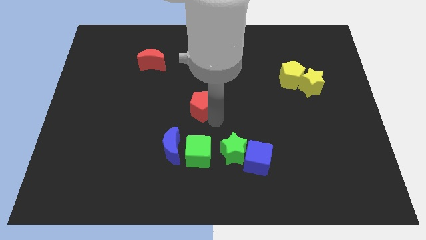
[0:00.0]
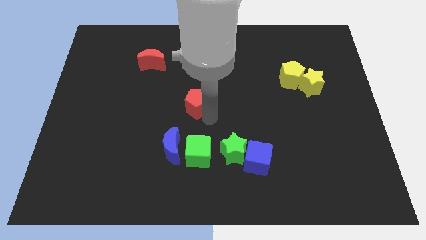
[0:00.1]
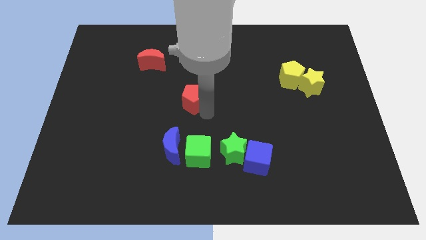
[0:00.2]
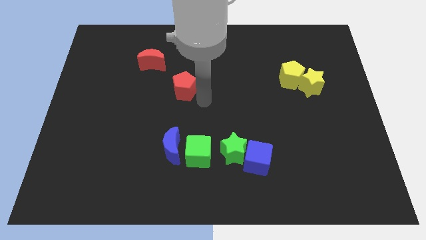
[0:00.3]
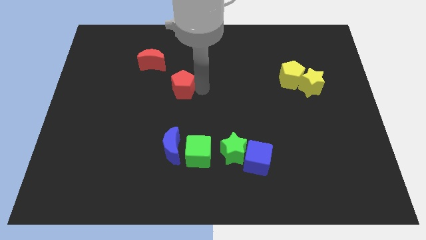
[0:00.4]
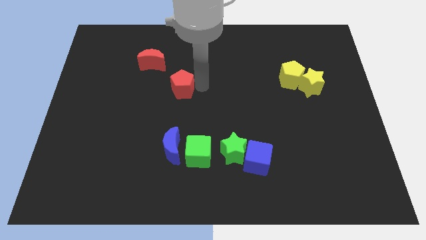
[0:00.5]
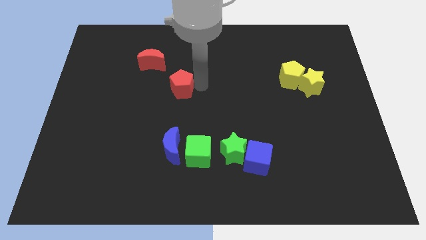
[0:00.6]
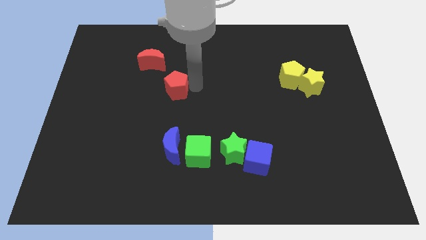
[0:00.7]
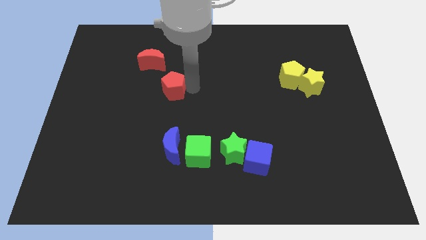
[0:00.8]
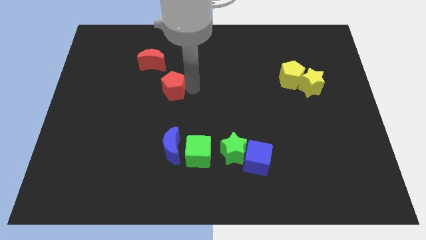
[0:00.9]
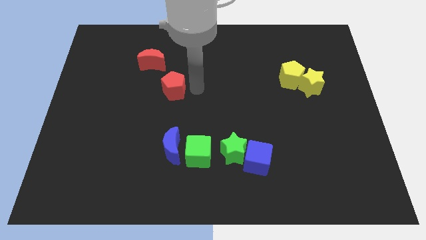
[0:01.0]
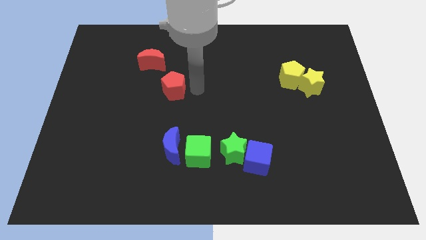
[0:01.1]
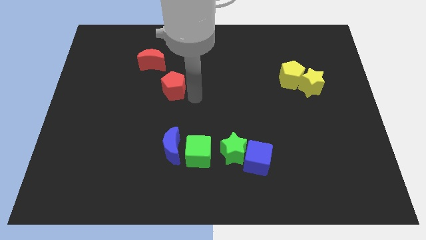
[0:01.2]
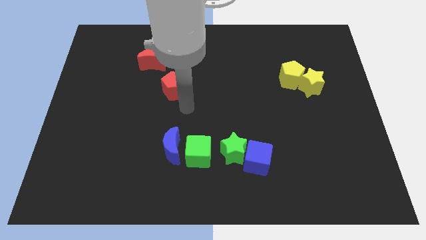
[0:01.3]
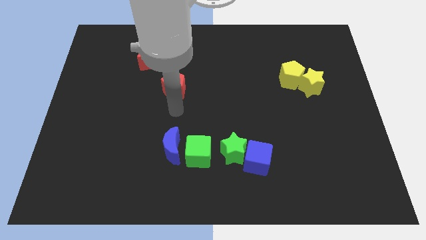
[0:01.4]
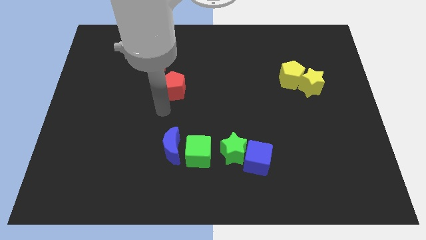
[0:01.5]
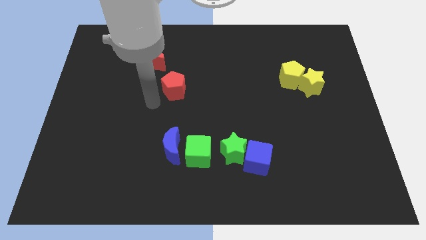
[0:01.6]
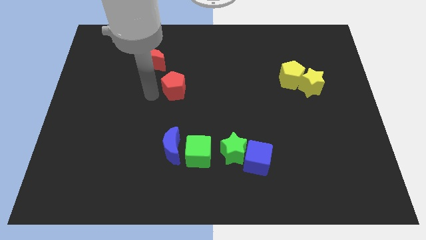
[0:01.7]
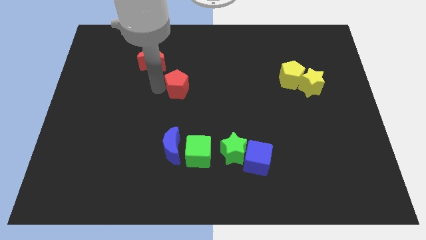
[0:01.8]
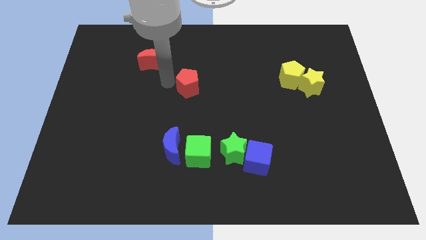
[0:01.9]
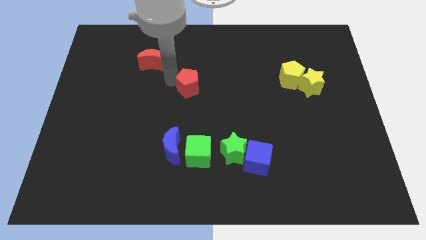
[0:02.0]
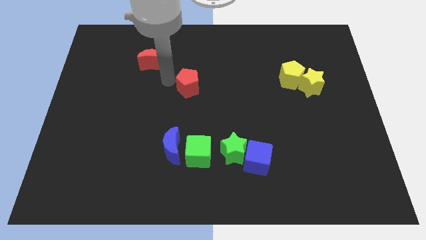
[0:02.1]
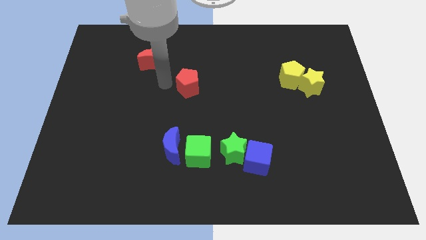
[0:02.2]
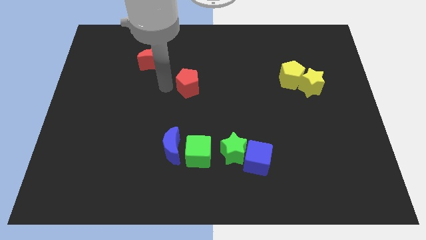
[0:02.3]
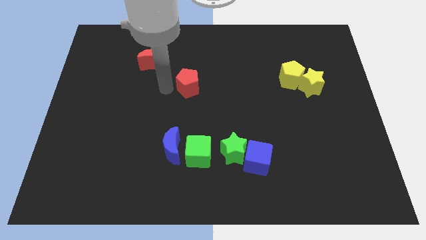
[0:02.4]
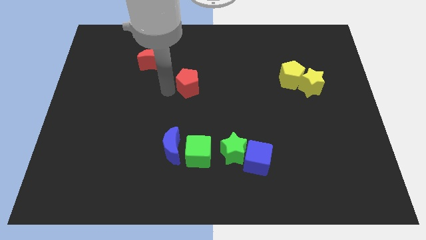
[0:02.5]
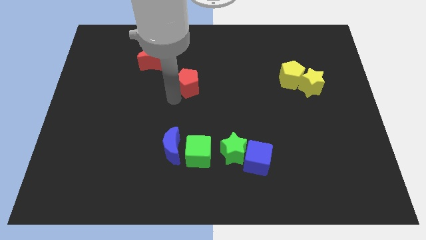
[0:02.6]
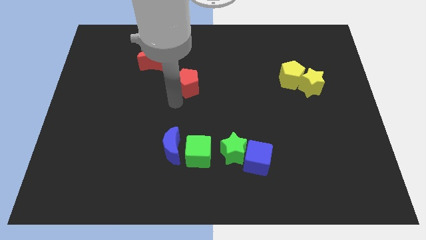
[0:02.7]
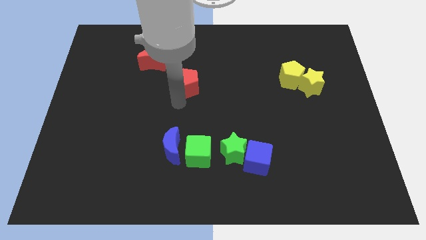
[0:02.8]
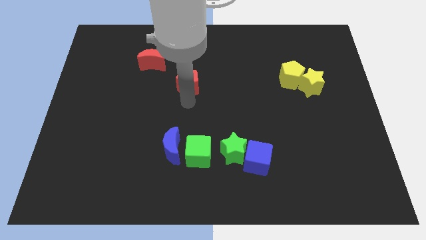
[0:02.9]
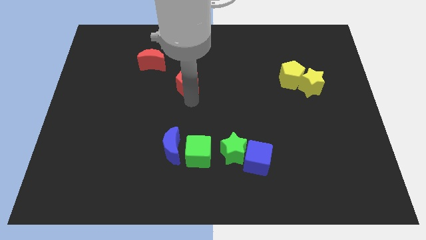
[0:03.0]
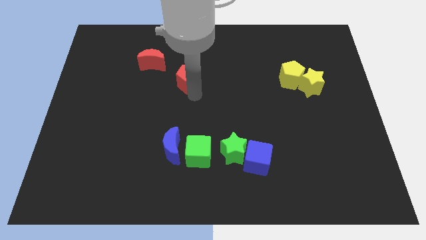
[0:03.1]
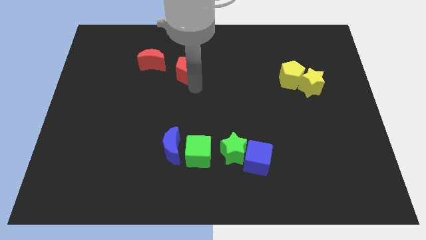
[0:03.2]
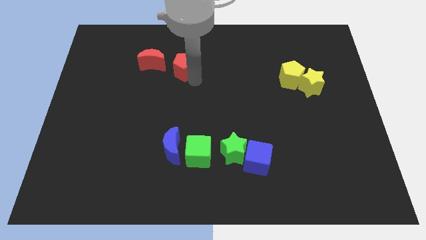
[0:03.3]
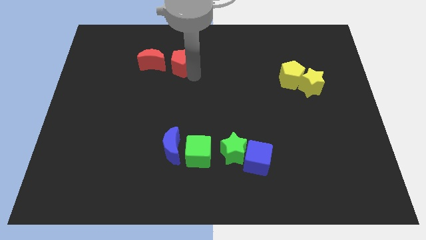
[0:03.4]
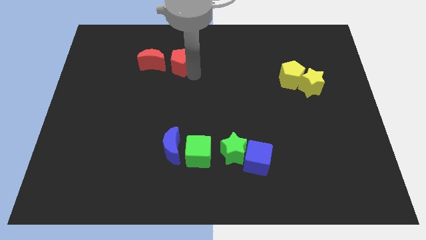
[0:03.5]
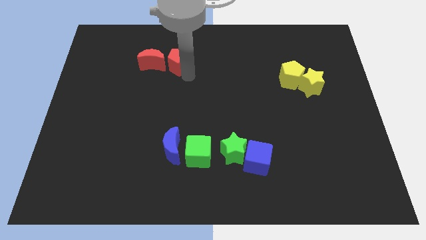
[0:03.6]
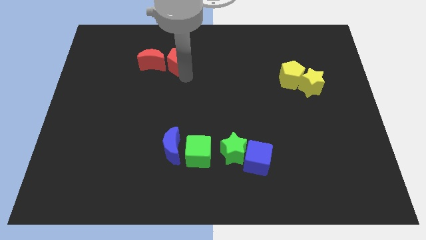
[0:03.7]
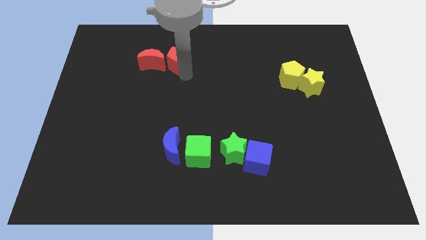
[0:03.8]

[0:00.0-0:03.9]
place the red pentagon right to the red crescent

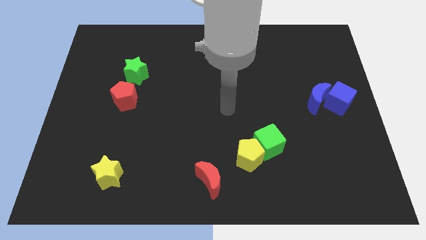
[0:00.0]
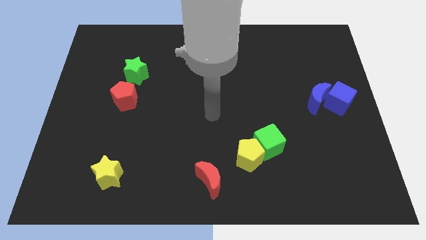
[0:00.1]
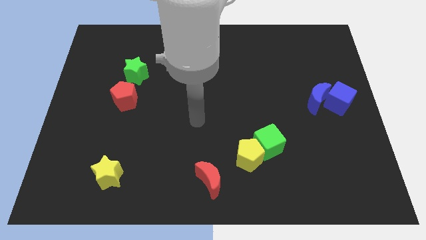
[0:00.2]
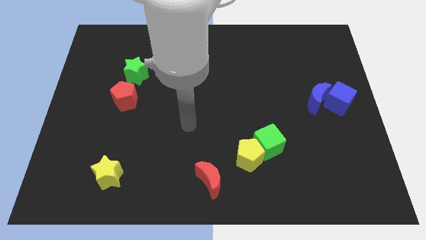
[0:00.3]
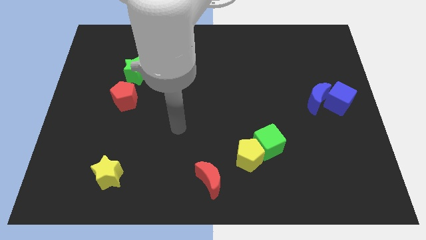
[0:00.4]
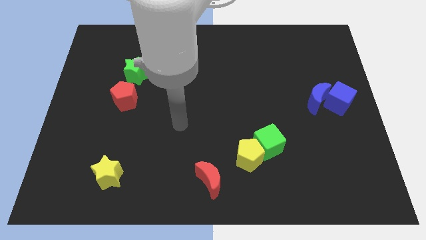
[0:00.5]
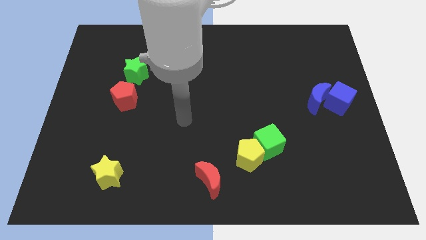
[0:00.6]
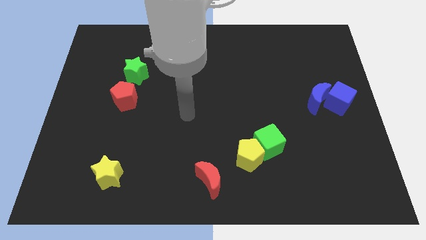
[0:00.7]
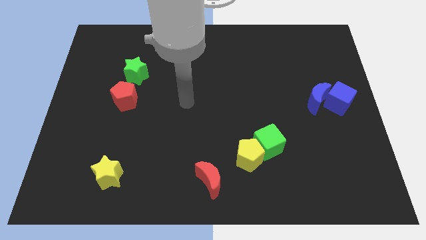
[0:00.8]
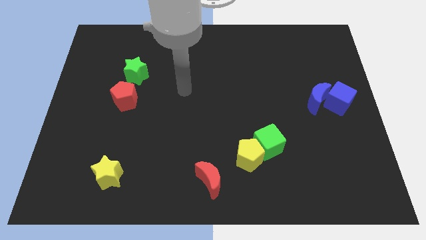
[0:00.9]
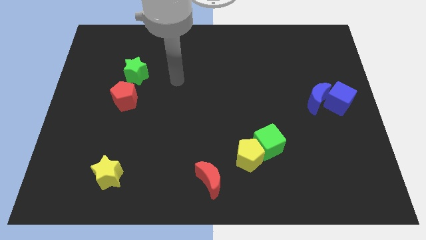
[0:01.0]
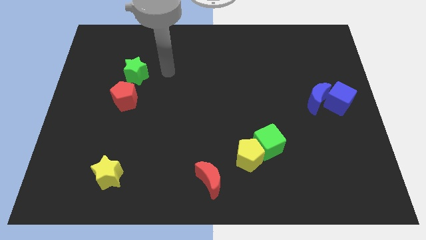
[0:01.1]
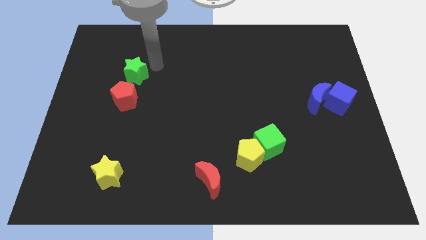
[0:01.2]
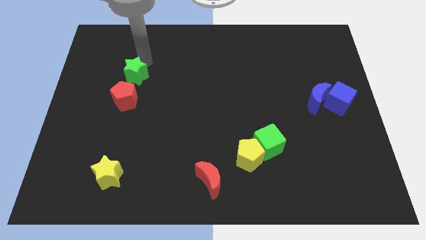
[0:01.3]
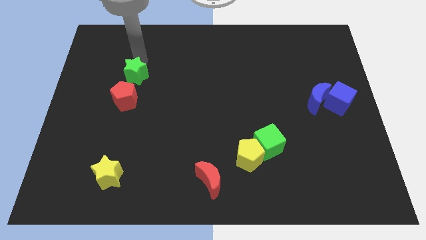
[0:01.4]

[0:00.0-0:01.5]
place your arm to the top of green star

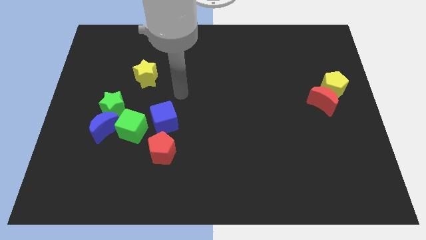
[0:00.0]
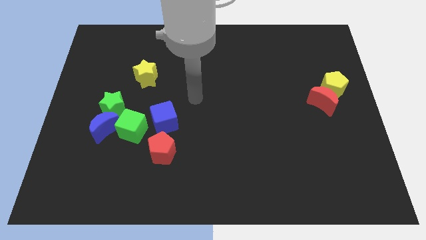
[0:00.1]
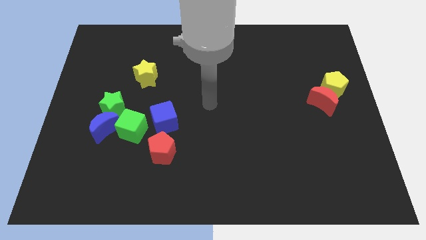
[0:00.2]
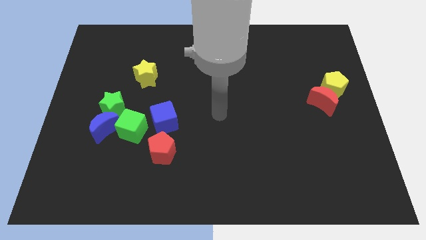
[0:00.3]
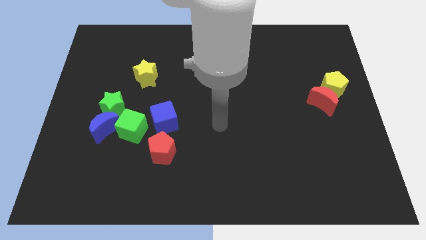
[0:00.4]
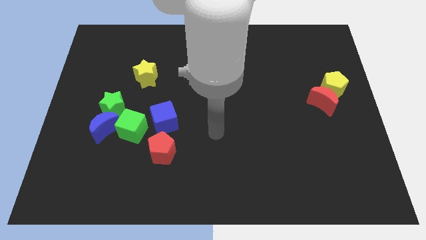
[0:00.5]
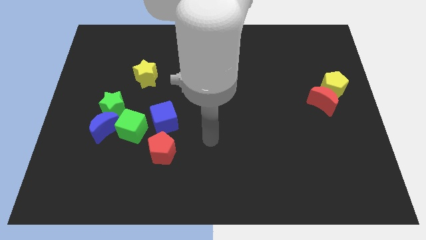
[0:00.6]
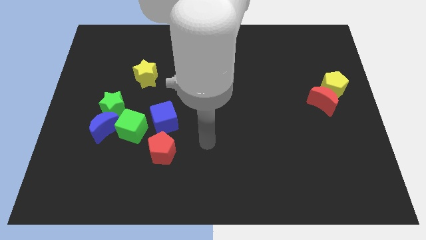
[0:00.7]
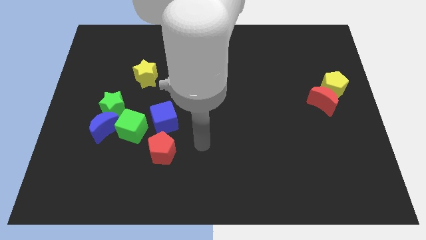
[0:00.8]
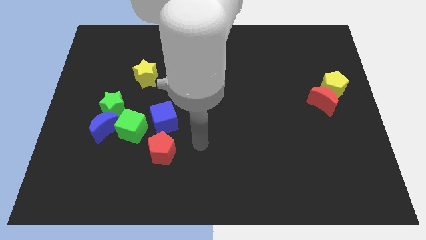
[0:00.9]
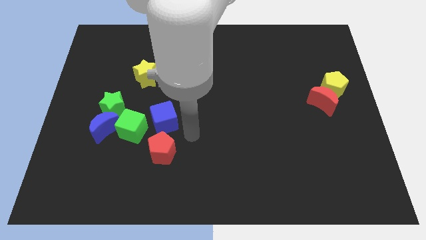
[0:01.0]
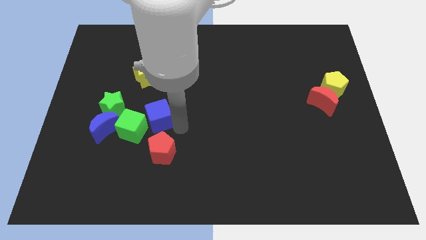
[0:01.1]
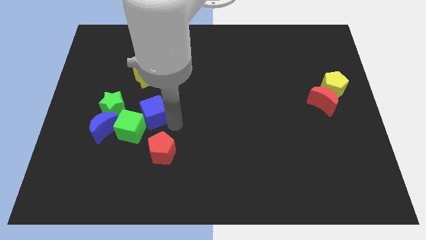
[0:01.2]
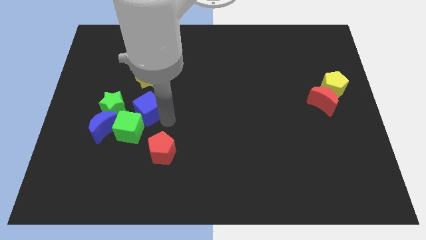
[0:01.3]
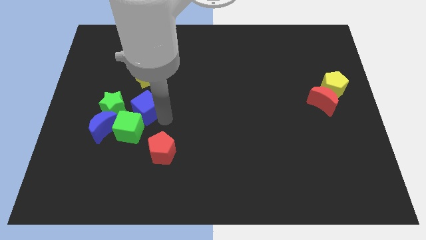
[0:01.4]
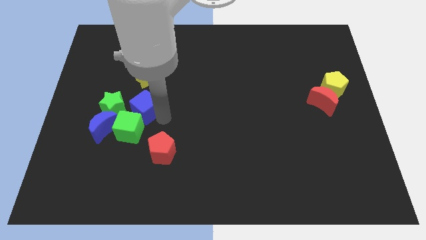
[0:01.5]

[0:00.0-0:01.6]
move the blue cube below the yellow star

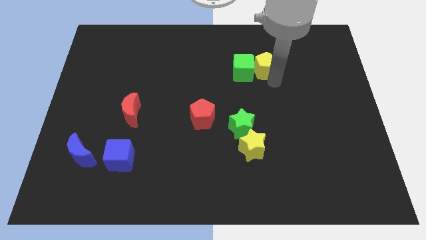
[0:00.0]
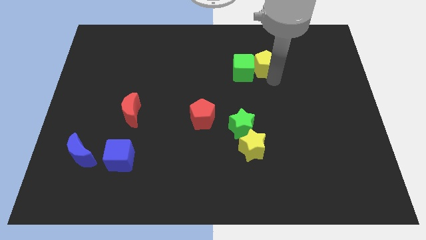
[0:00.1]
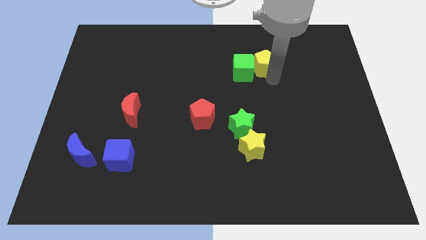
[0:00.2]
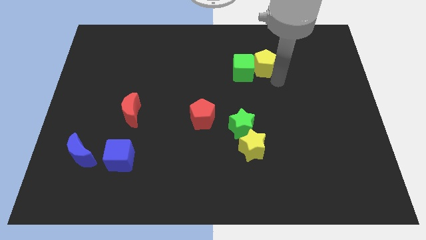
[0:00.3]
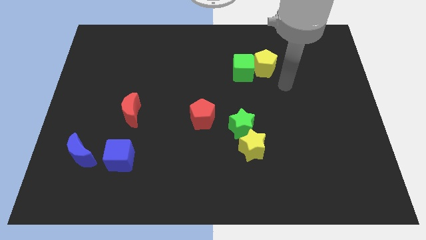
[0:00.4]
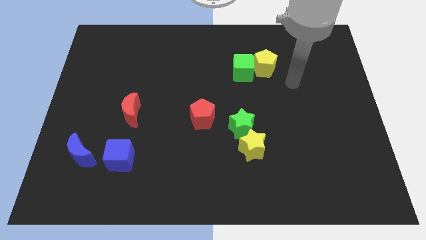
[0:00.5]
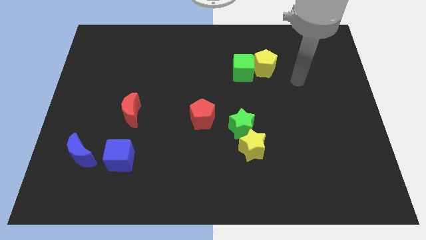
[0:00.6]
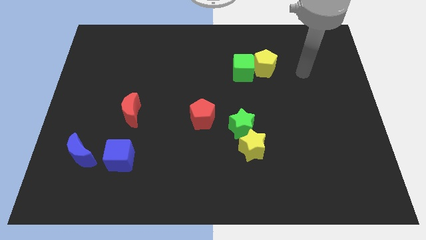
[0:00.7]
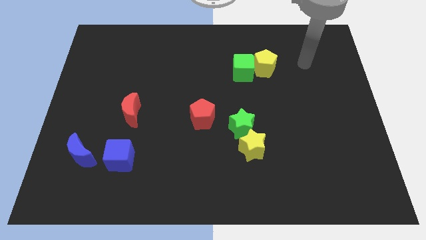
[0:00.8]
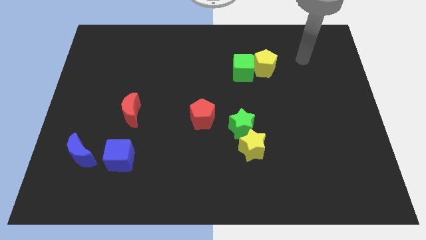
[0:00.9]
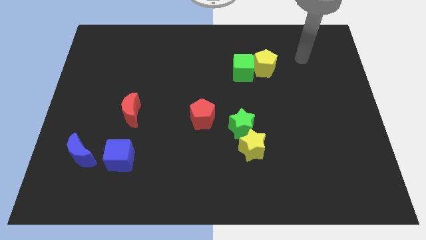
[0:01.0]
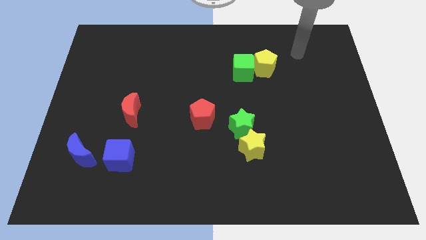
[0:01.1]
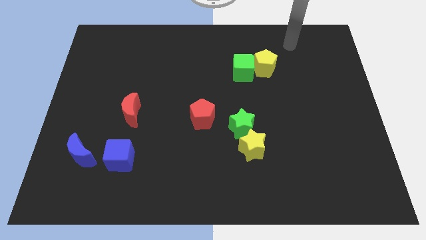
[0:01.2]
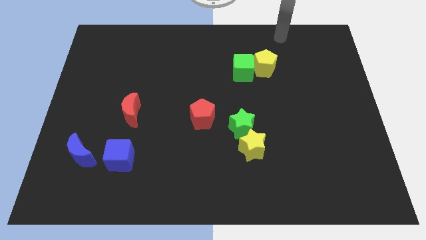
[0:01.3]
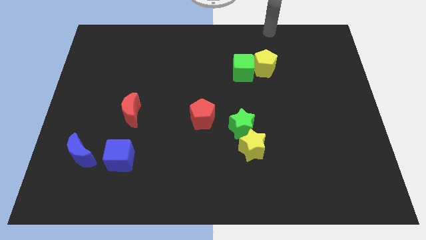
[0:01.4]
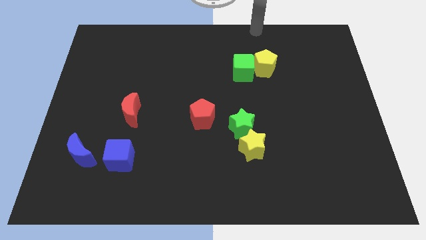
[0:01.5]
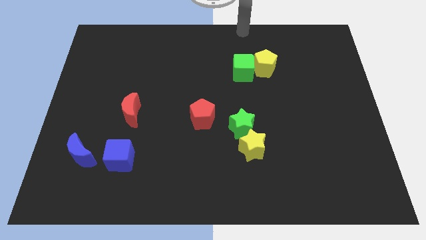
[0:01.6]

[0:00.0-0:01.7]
move your arm away from the yellow pentagon

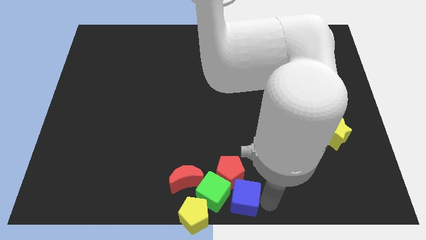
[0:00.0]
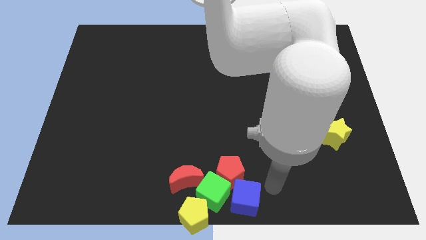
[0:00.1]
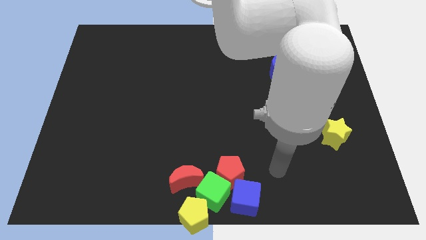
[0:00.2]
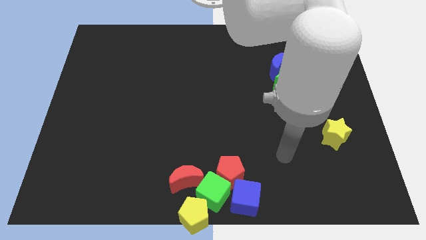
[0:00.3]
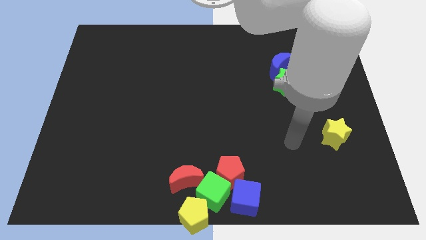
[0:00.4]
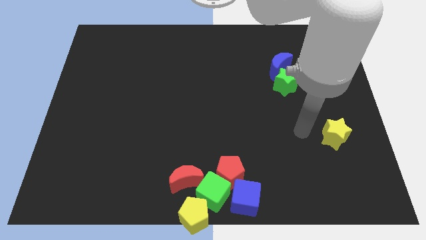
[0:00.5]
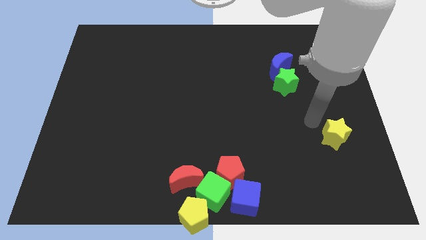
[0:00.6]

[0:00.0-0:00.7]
move the arm away from the blue cube
